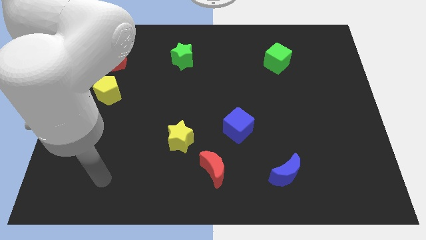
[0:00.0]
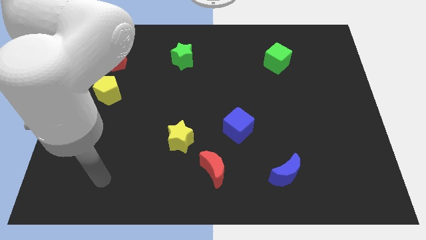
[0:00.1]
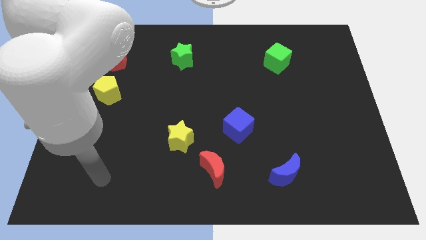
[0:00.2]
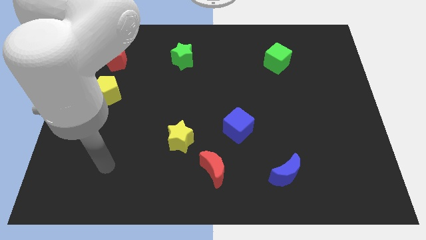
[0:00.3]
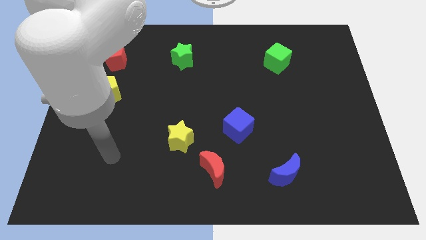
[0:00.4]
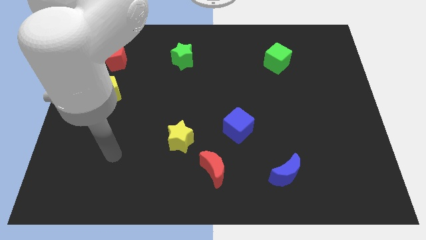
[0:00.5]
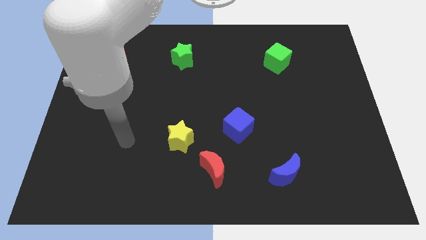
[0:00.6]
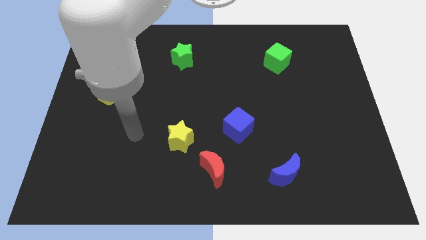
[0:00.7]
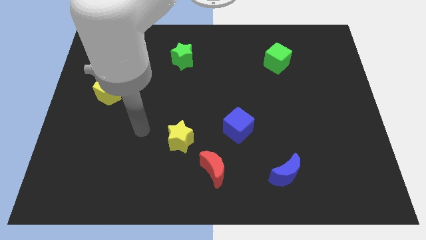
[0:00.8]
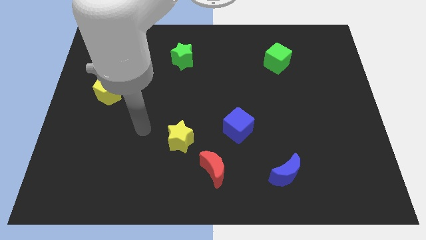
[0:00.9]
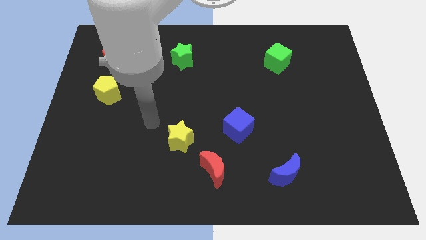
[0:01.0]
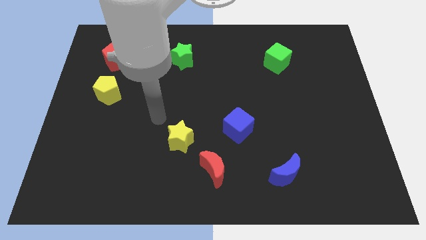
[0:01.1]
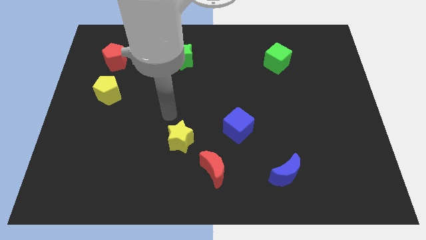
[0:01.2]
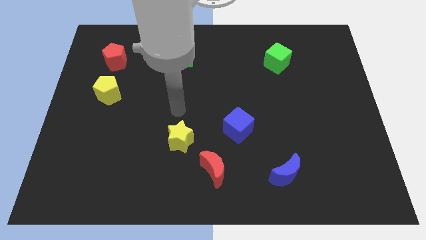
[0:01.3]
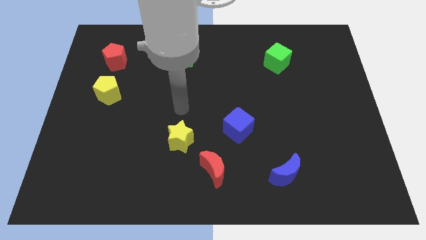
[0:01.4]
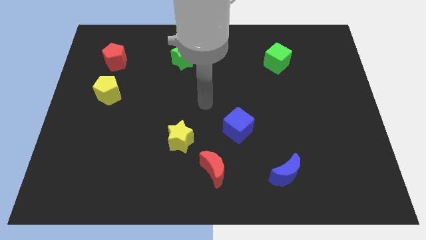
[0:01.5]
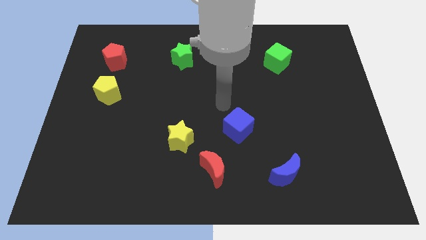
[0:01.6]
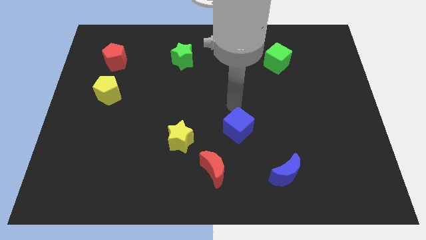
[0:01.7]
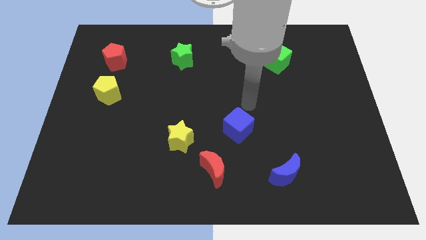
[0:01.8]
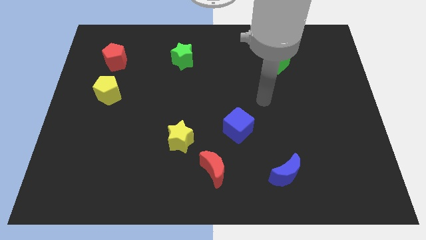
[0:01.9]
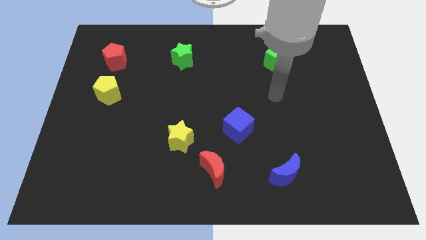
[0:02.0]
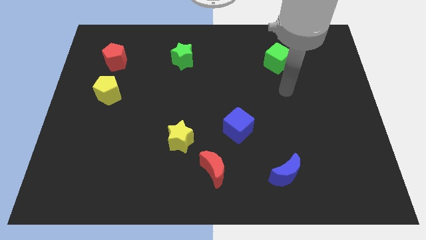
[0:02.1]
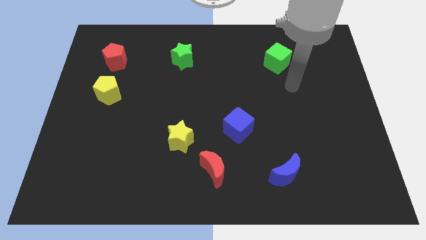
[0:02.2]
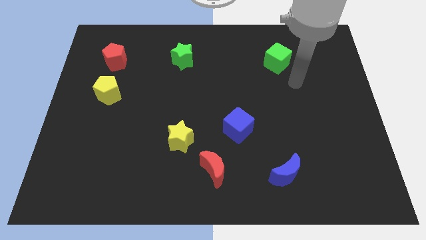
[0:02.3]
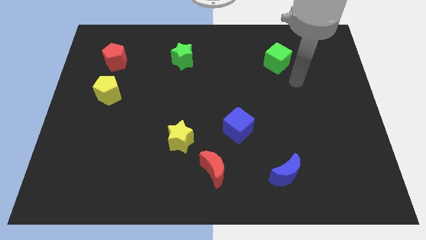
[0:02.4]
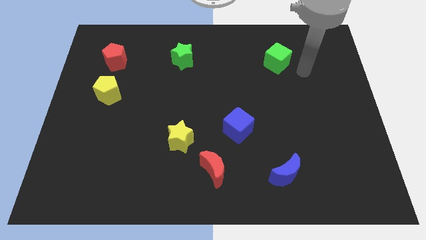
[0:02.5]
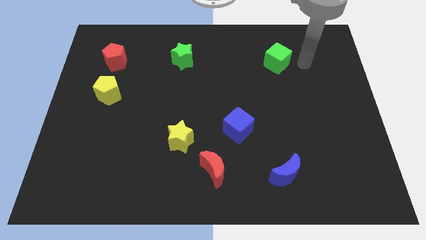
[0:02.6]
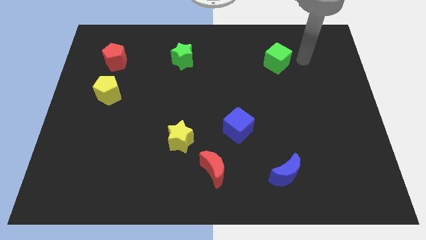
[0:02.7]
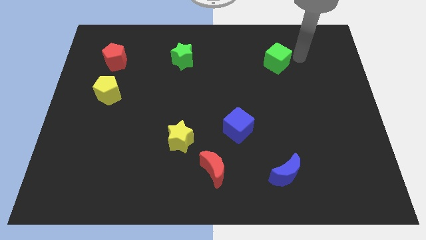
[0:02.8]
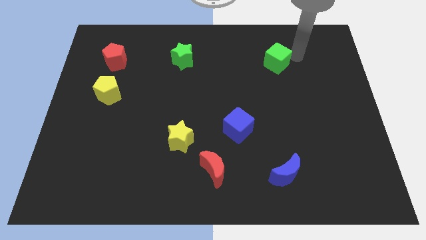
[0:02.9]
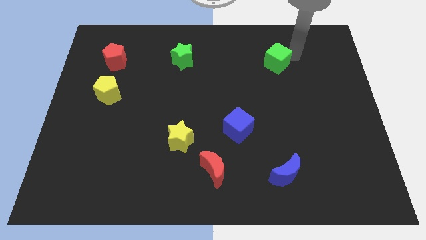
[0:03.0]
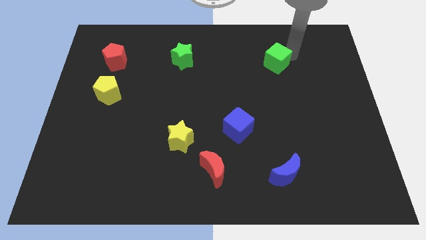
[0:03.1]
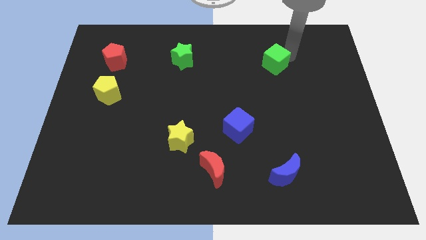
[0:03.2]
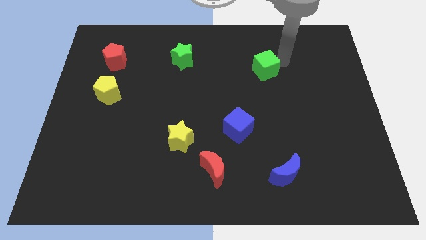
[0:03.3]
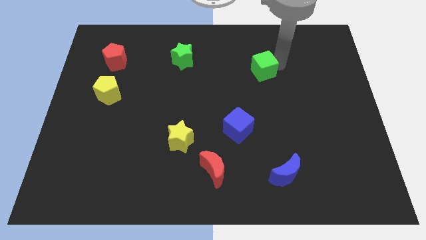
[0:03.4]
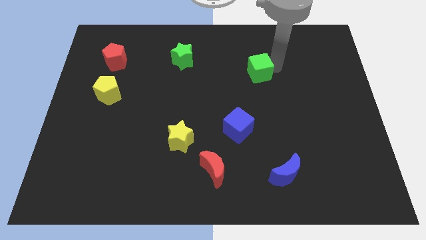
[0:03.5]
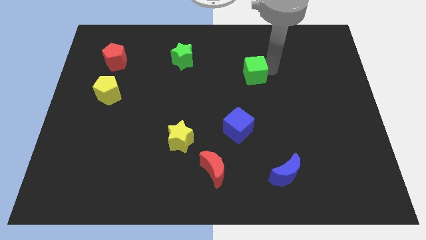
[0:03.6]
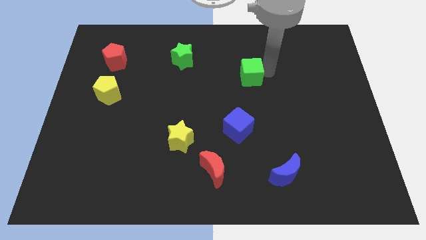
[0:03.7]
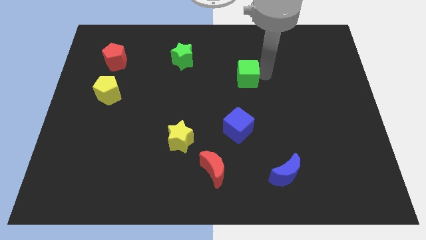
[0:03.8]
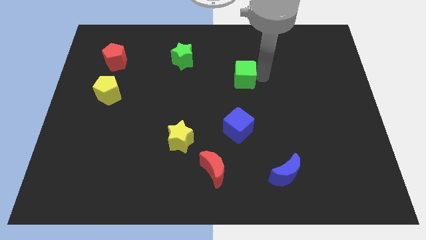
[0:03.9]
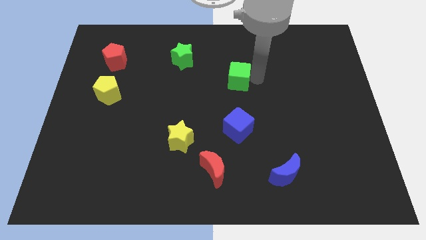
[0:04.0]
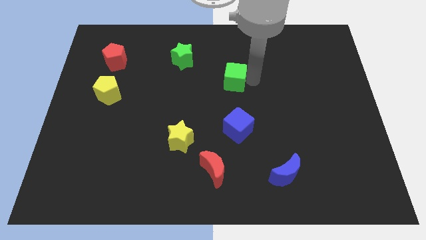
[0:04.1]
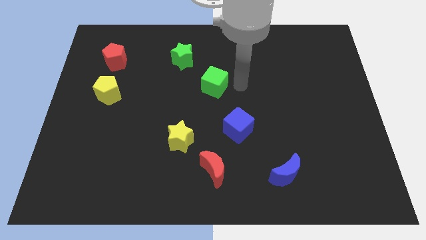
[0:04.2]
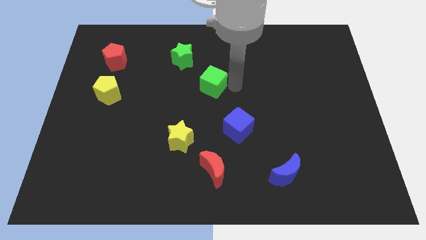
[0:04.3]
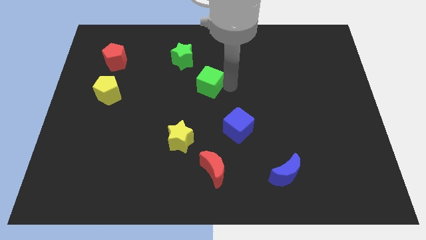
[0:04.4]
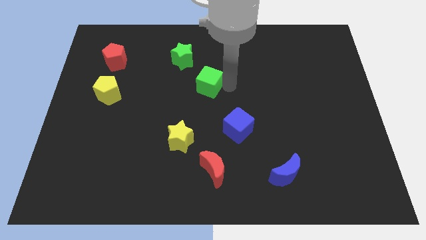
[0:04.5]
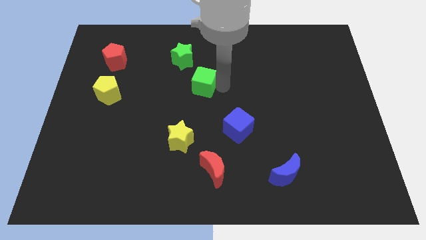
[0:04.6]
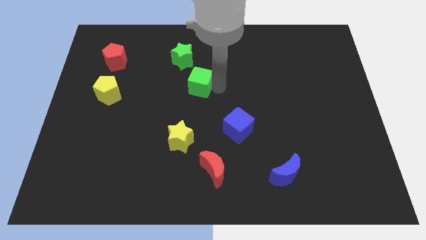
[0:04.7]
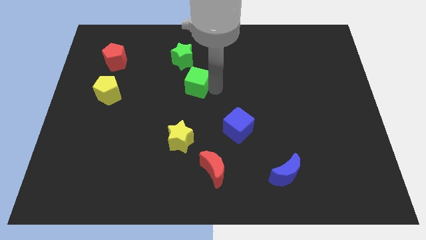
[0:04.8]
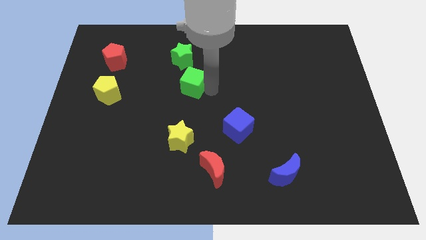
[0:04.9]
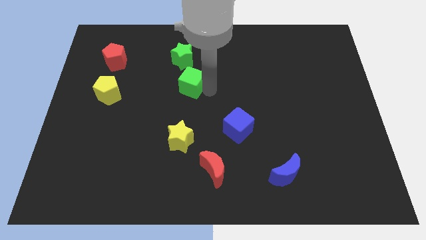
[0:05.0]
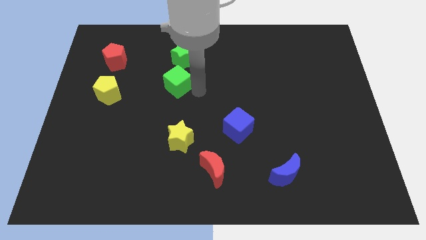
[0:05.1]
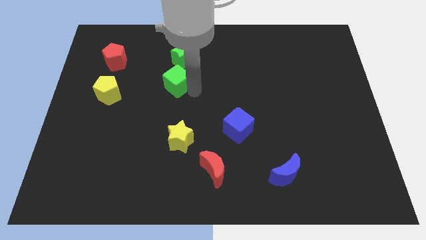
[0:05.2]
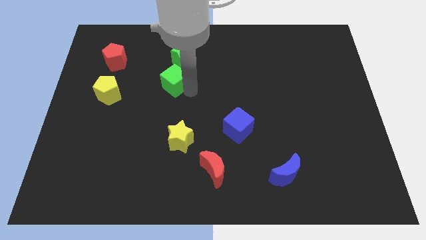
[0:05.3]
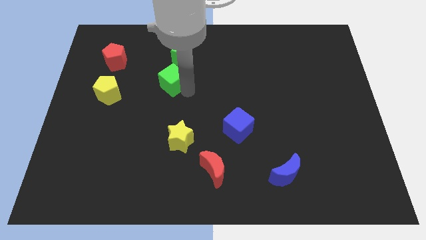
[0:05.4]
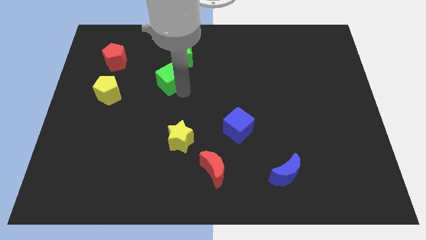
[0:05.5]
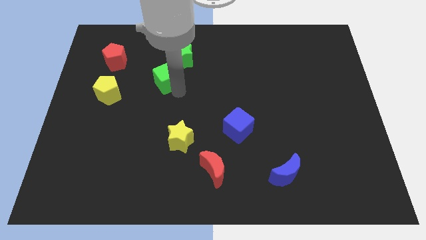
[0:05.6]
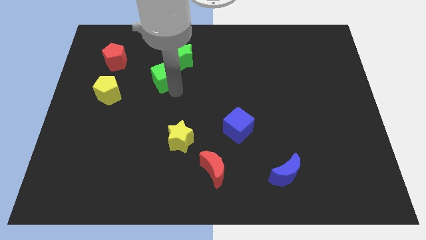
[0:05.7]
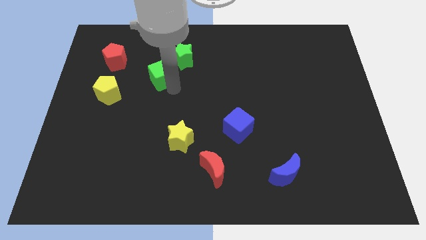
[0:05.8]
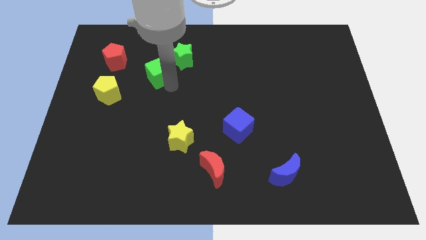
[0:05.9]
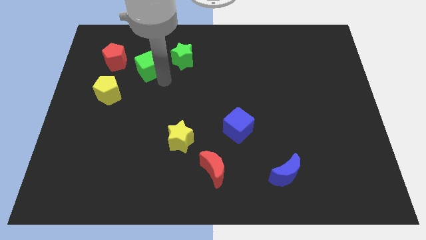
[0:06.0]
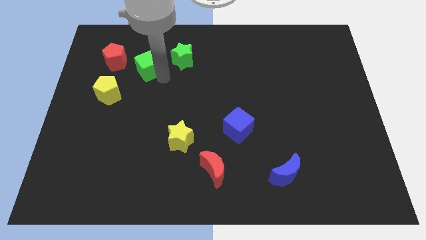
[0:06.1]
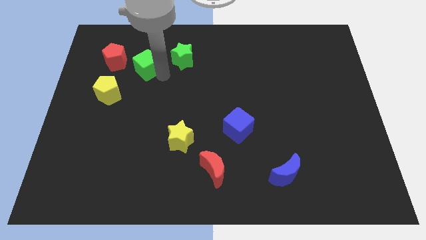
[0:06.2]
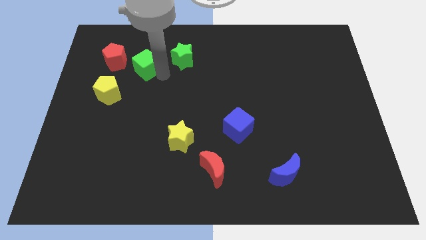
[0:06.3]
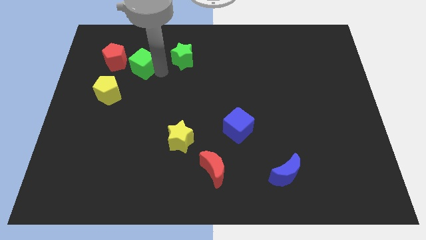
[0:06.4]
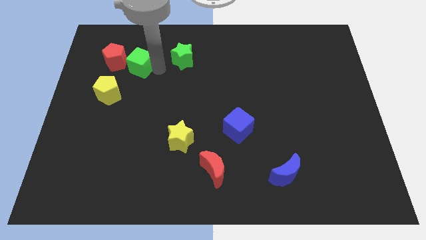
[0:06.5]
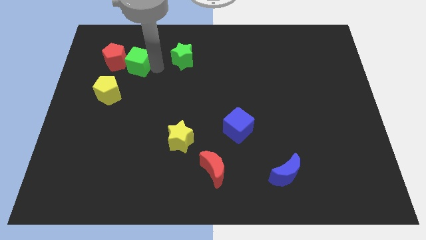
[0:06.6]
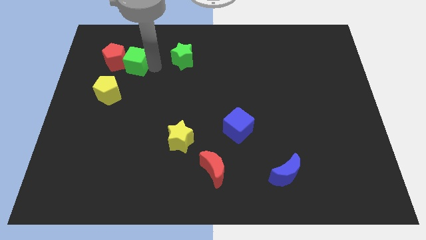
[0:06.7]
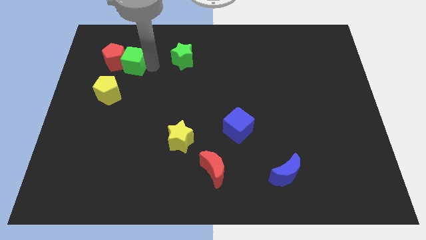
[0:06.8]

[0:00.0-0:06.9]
push the green cube next to the red pentagon

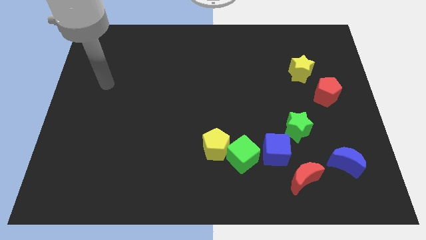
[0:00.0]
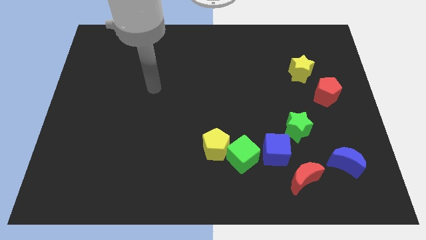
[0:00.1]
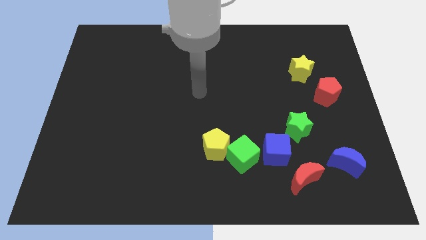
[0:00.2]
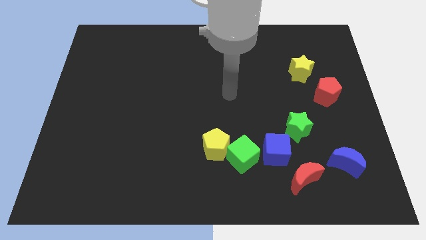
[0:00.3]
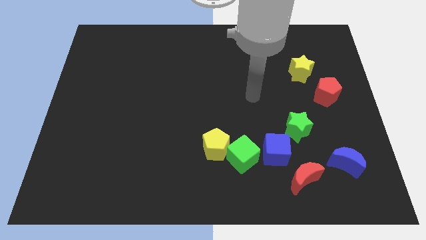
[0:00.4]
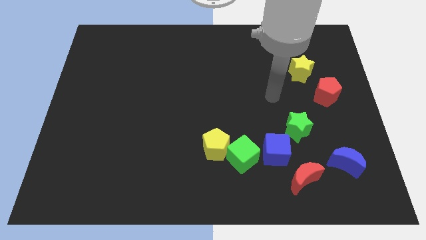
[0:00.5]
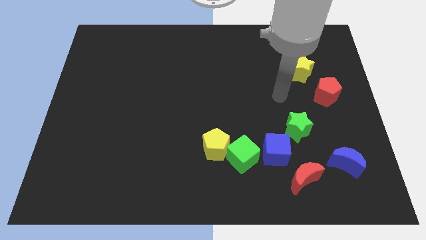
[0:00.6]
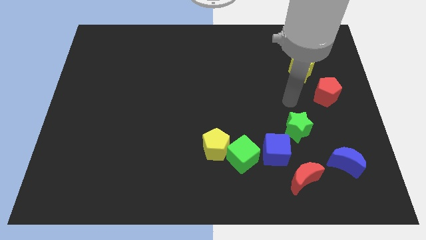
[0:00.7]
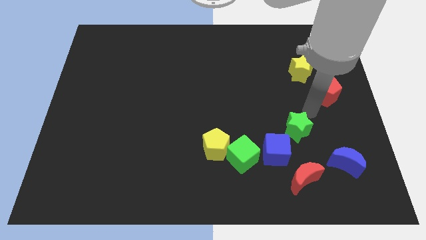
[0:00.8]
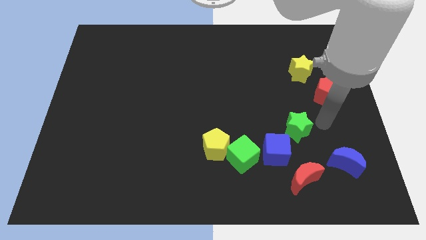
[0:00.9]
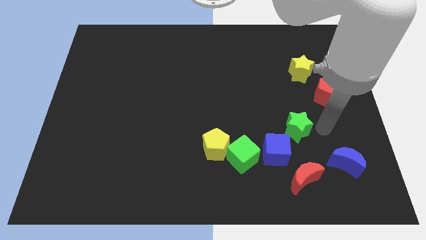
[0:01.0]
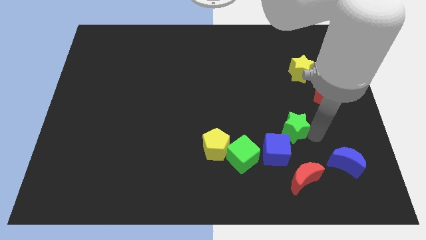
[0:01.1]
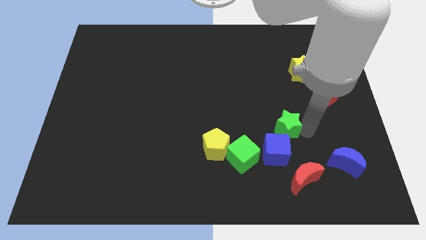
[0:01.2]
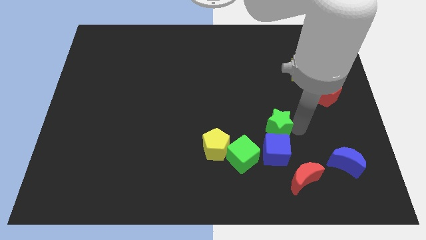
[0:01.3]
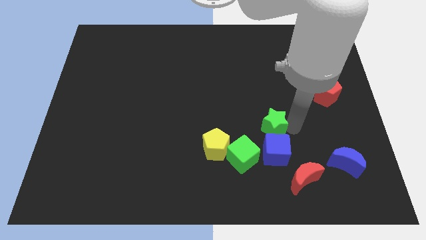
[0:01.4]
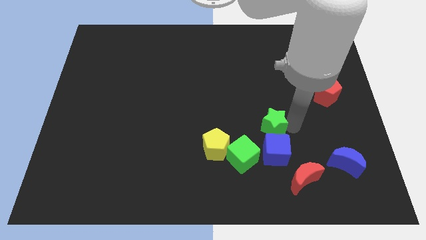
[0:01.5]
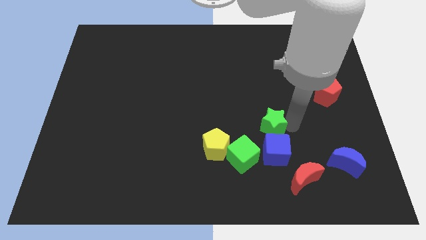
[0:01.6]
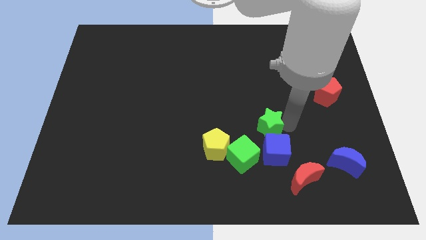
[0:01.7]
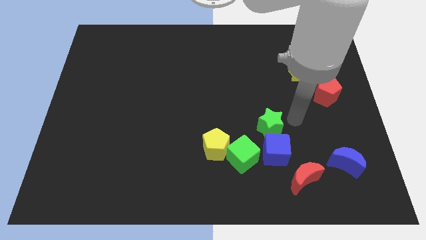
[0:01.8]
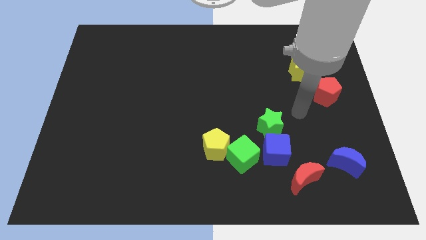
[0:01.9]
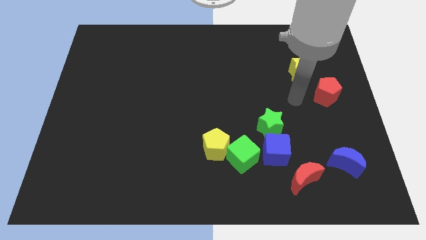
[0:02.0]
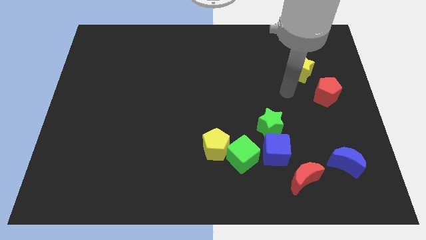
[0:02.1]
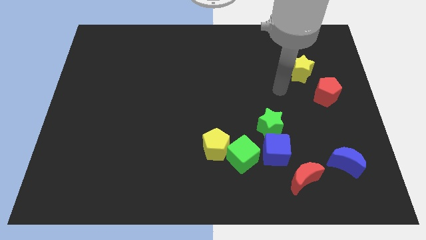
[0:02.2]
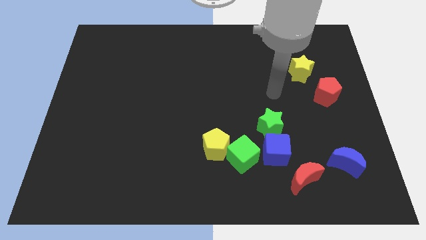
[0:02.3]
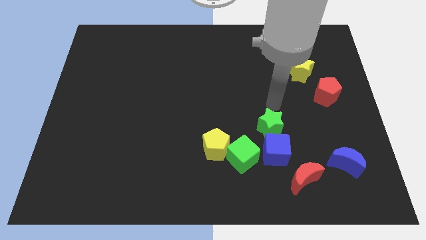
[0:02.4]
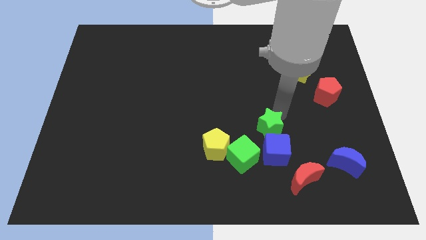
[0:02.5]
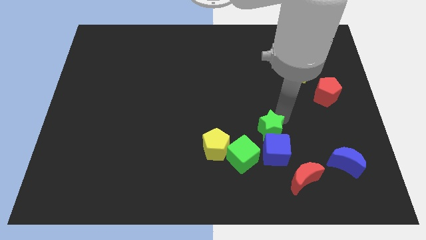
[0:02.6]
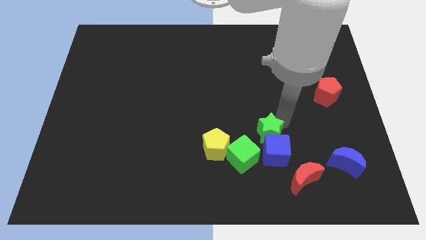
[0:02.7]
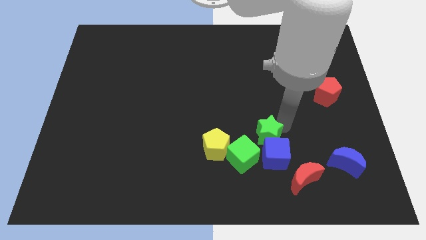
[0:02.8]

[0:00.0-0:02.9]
move the green star next to the blue cube
